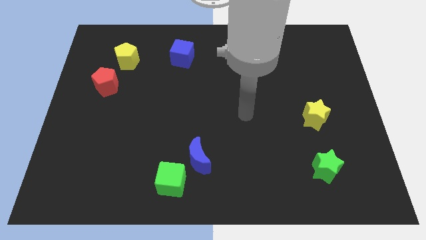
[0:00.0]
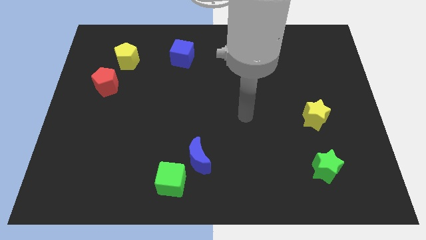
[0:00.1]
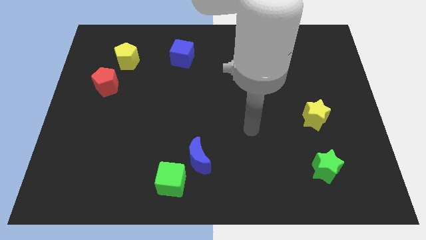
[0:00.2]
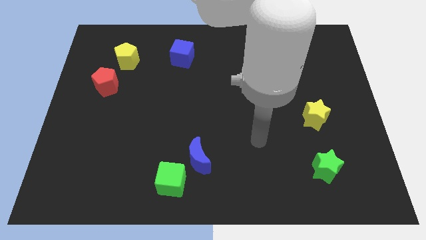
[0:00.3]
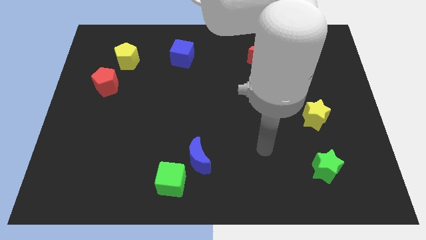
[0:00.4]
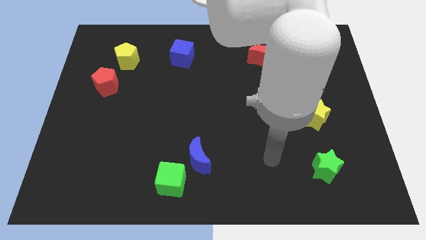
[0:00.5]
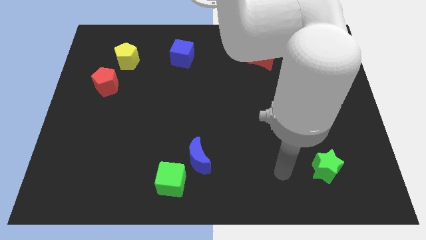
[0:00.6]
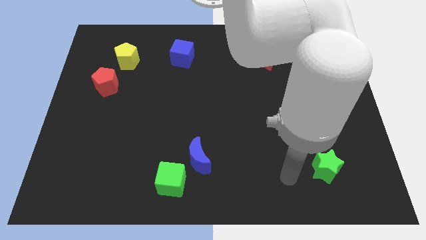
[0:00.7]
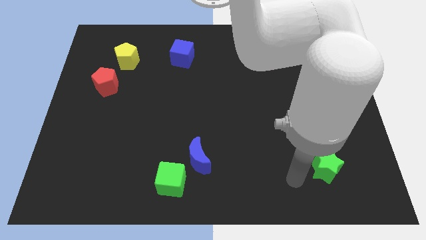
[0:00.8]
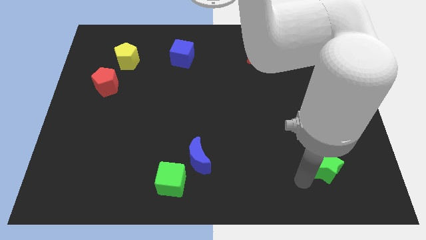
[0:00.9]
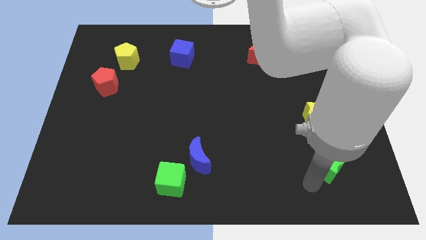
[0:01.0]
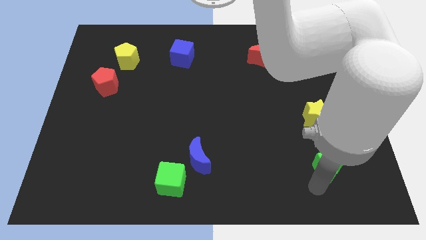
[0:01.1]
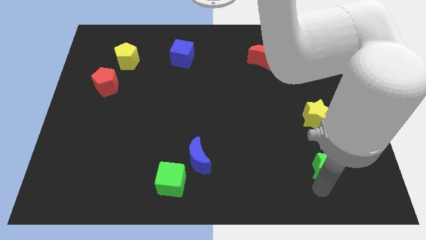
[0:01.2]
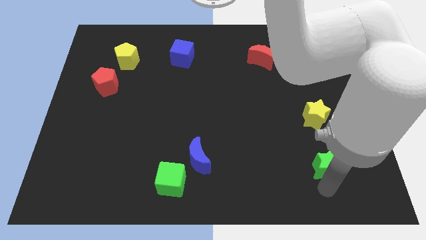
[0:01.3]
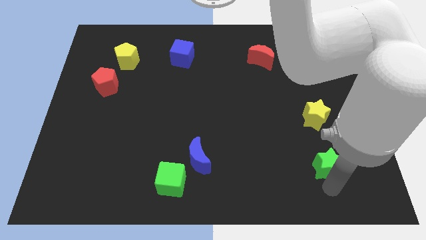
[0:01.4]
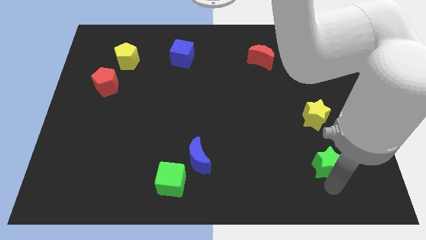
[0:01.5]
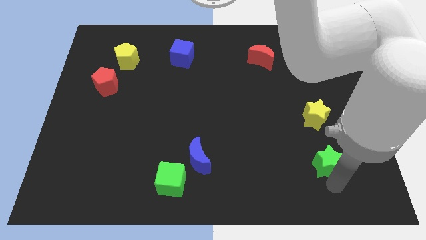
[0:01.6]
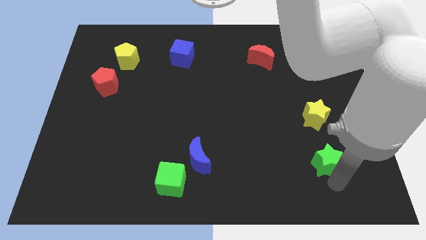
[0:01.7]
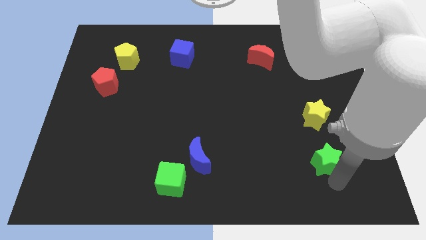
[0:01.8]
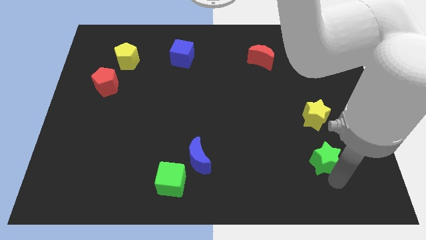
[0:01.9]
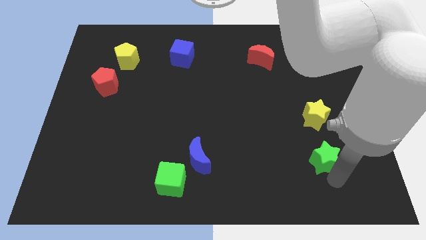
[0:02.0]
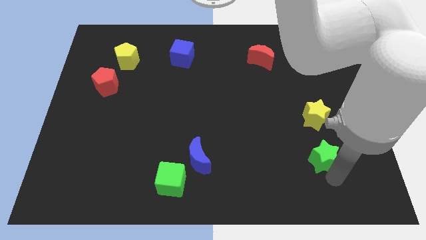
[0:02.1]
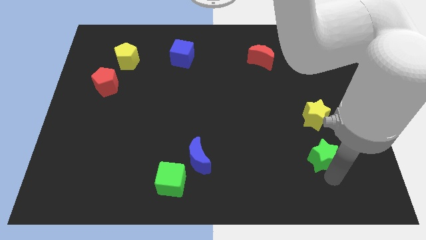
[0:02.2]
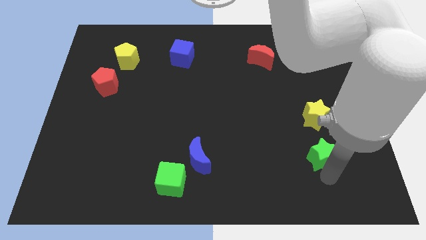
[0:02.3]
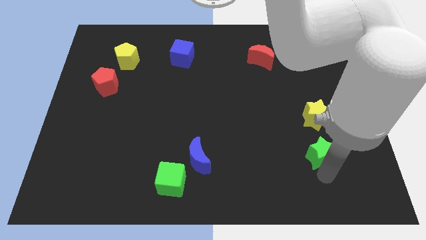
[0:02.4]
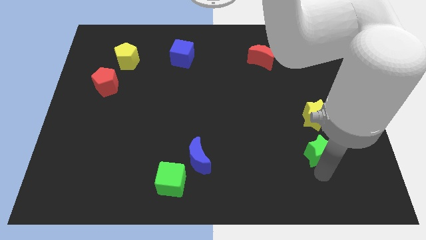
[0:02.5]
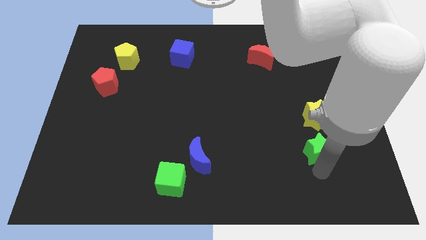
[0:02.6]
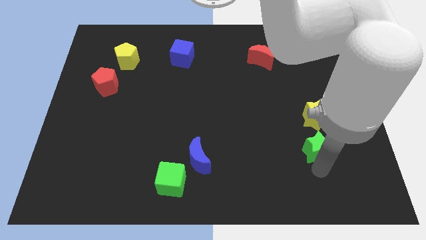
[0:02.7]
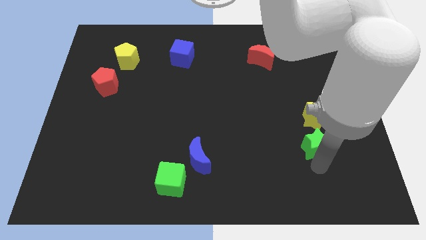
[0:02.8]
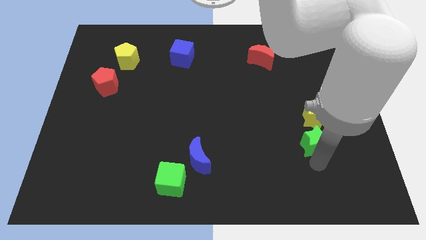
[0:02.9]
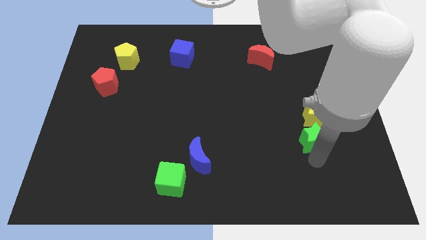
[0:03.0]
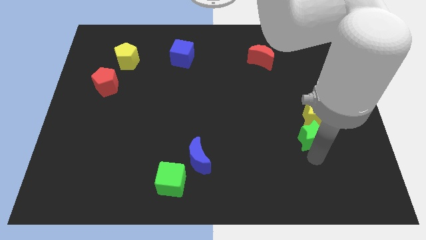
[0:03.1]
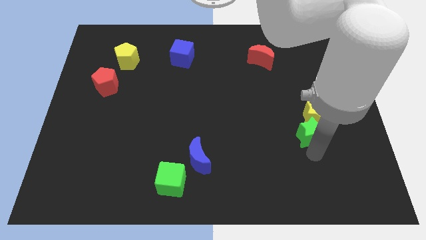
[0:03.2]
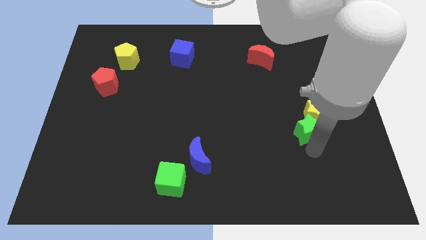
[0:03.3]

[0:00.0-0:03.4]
put the green star next to the yellow star

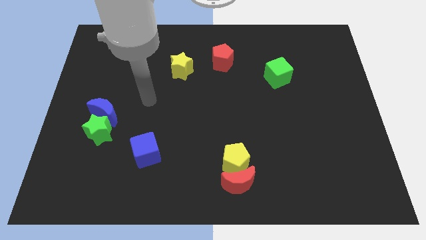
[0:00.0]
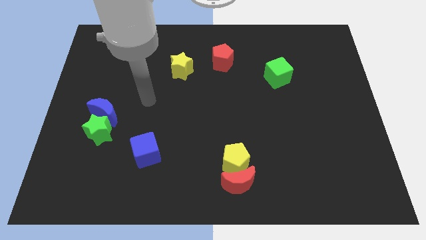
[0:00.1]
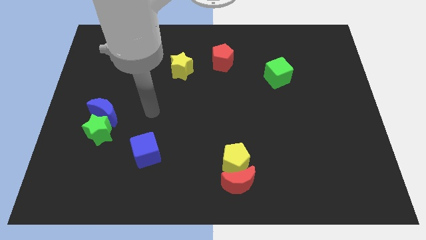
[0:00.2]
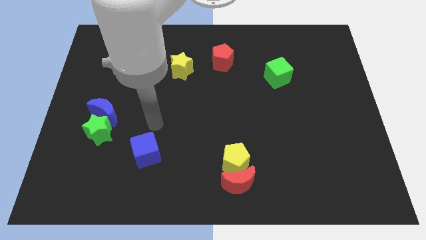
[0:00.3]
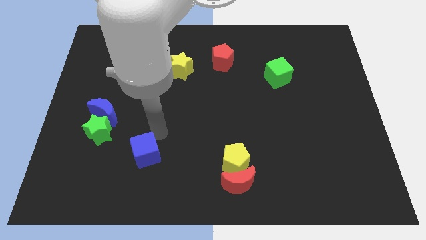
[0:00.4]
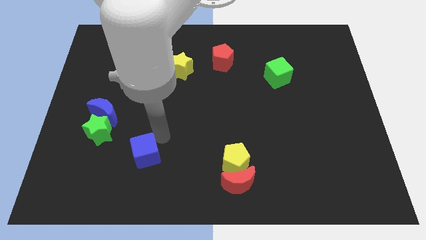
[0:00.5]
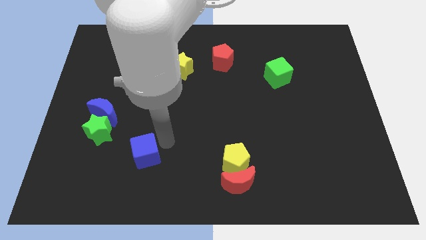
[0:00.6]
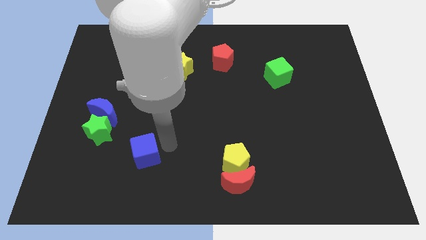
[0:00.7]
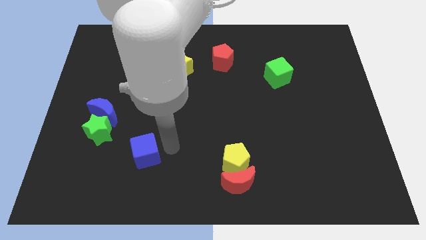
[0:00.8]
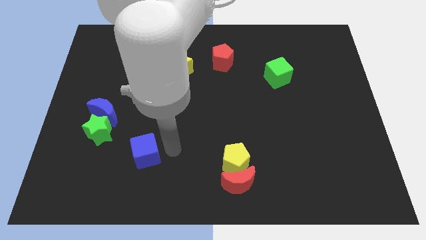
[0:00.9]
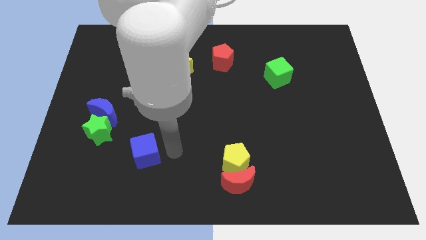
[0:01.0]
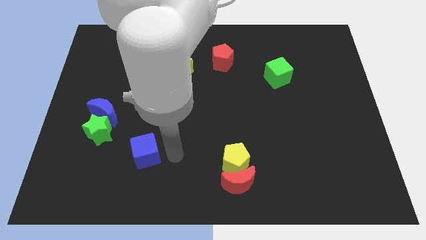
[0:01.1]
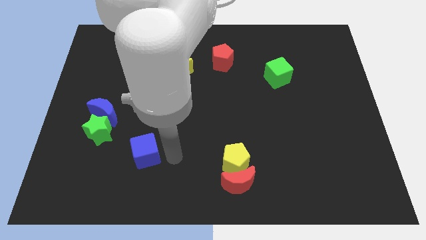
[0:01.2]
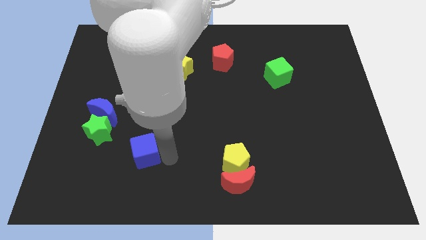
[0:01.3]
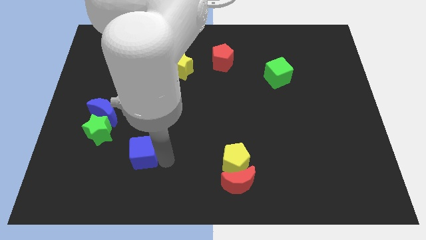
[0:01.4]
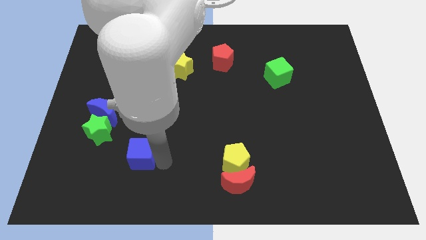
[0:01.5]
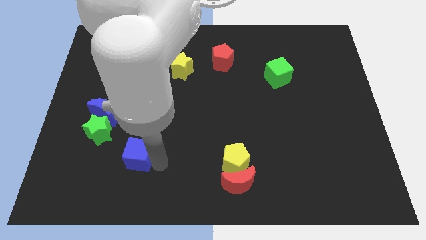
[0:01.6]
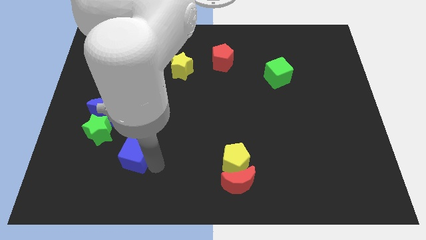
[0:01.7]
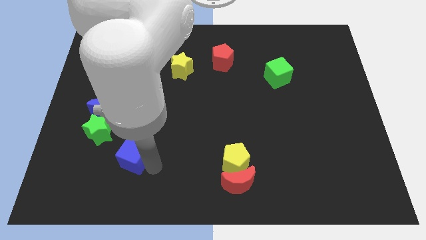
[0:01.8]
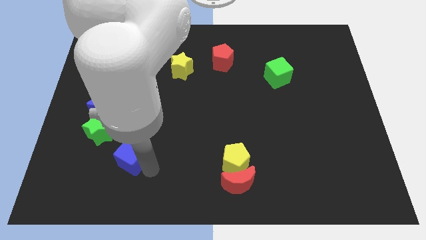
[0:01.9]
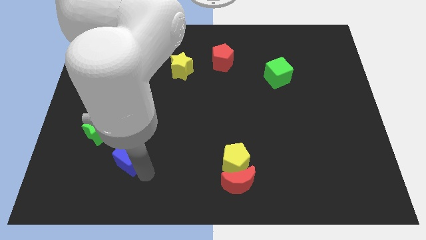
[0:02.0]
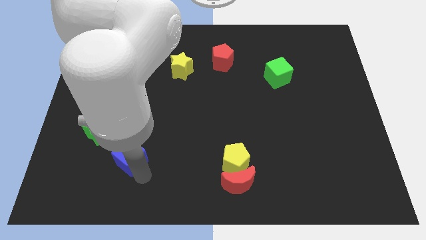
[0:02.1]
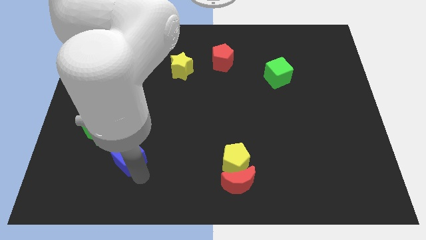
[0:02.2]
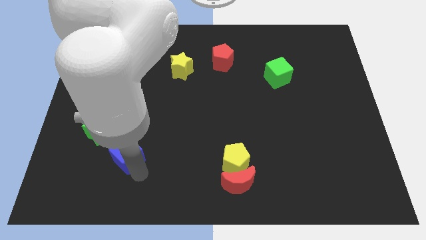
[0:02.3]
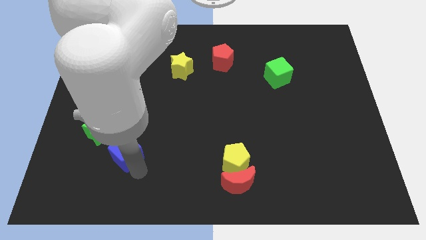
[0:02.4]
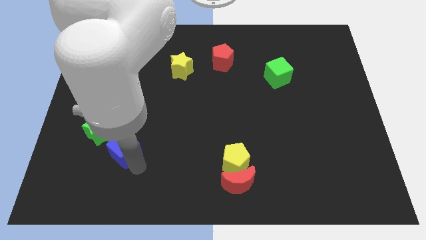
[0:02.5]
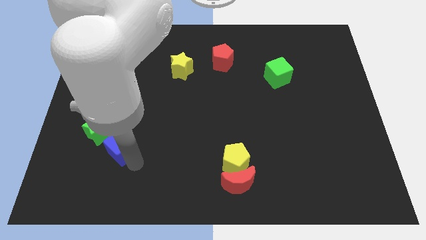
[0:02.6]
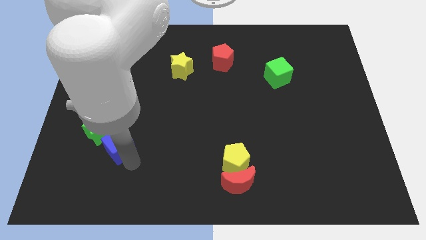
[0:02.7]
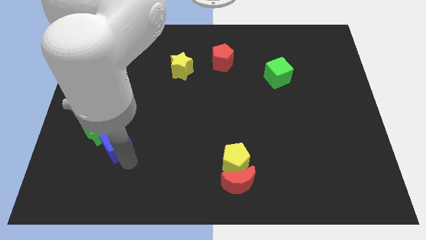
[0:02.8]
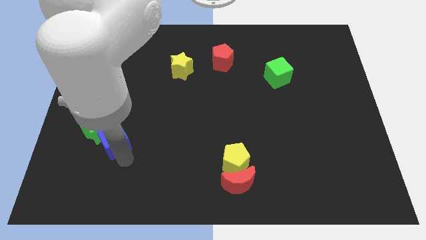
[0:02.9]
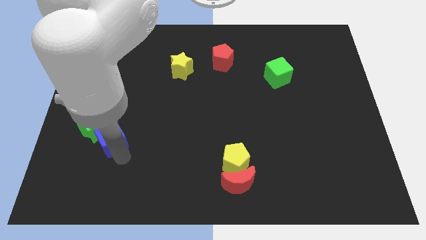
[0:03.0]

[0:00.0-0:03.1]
slide the blue cube to the green star

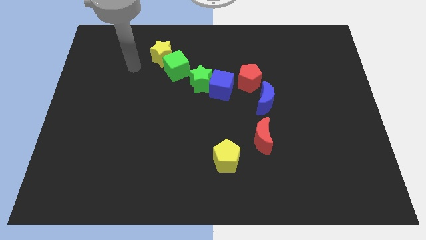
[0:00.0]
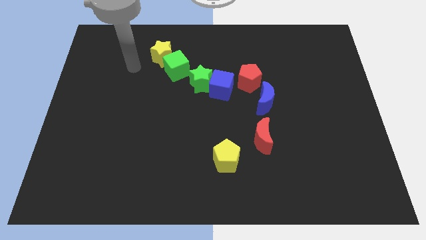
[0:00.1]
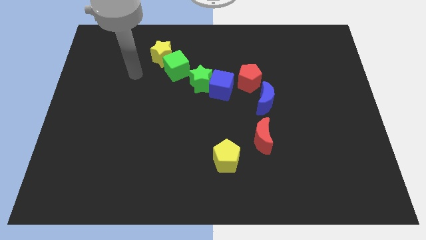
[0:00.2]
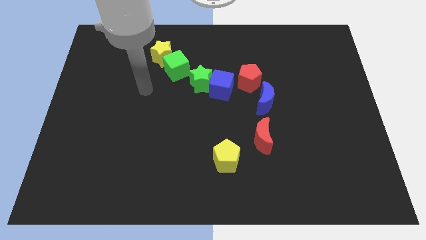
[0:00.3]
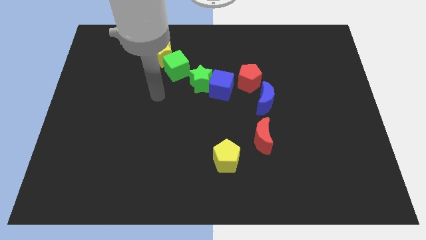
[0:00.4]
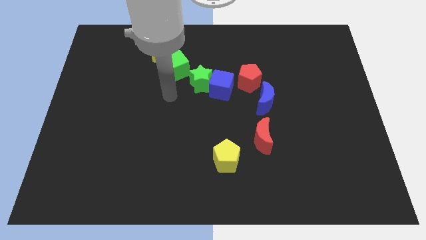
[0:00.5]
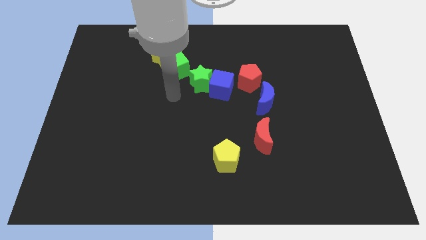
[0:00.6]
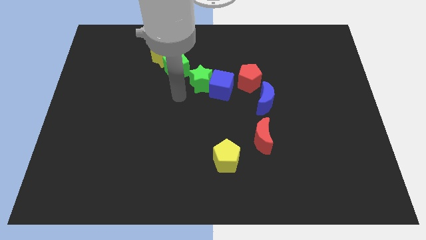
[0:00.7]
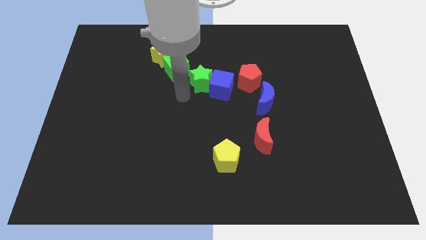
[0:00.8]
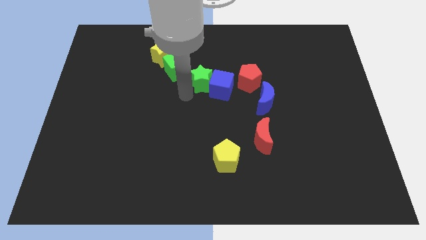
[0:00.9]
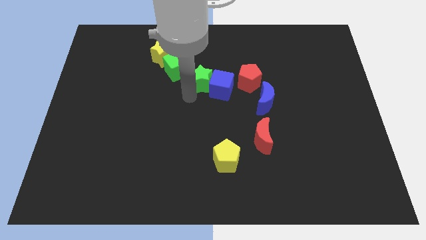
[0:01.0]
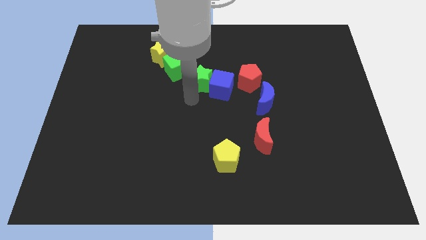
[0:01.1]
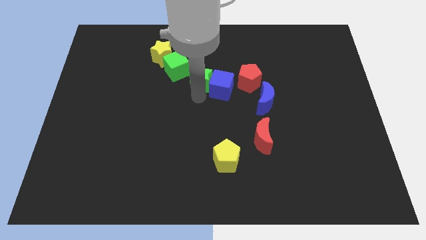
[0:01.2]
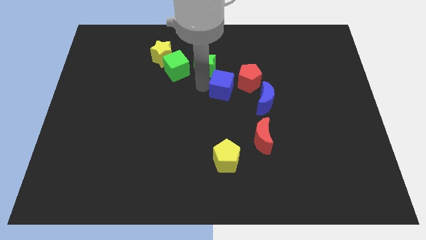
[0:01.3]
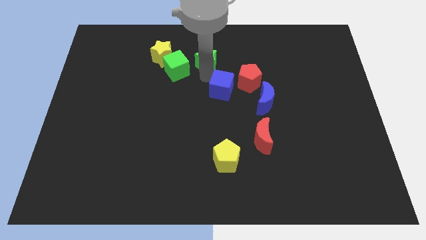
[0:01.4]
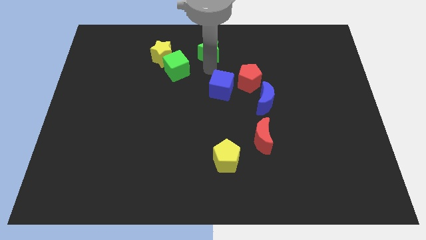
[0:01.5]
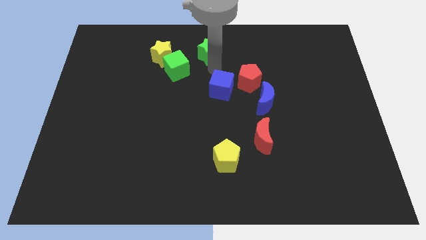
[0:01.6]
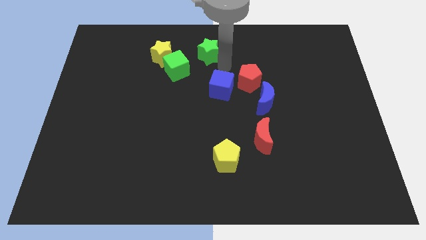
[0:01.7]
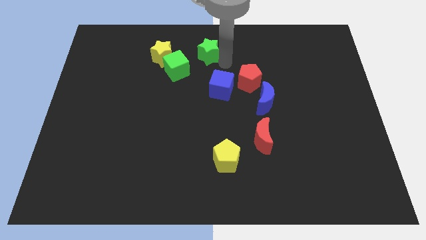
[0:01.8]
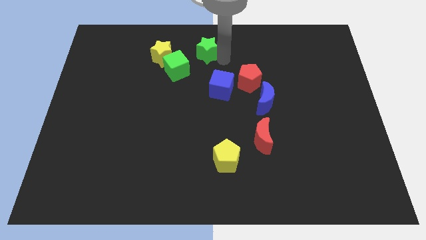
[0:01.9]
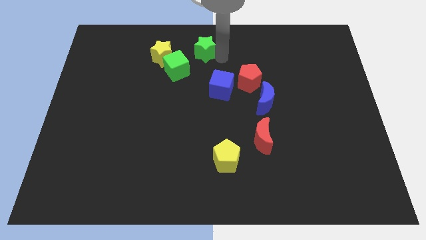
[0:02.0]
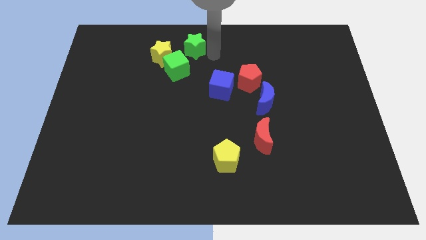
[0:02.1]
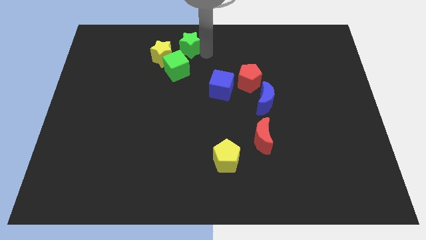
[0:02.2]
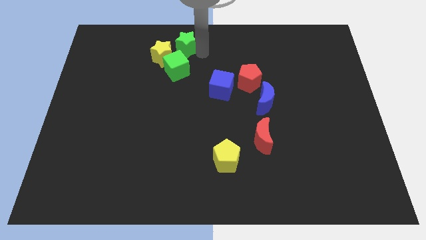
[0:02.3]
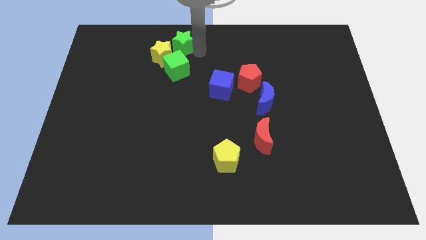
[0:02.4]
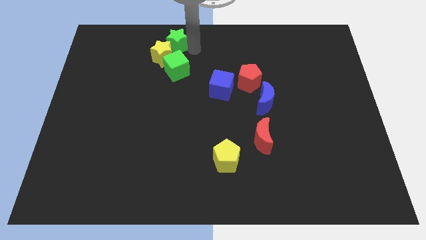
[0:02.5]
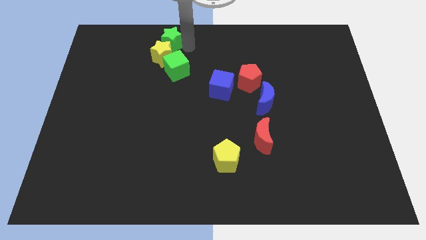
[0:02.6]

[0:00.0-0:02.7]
push the green star next to the yellow star
